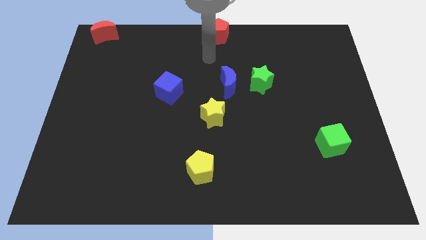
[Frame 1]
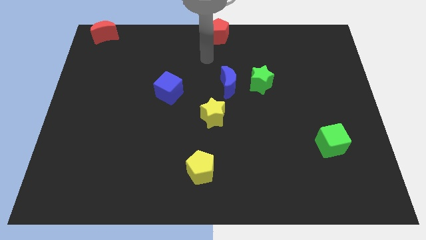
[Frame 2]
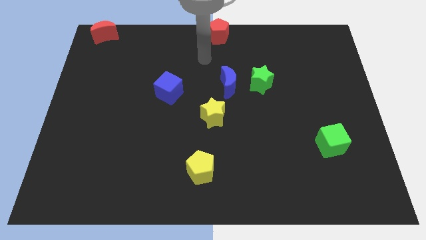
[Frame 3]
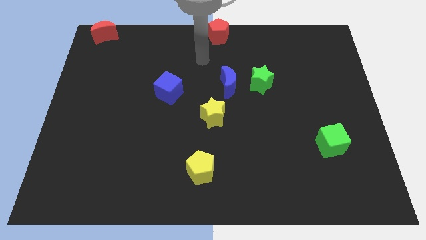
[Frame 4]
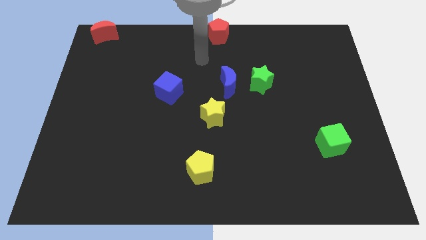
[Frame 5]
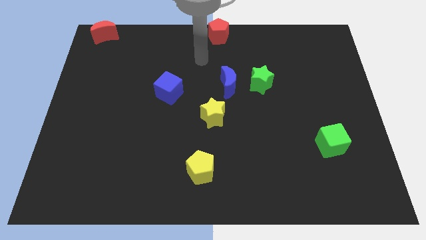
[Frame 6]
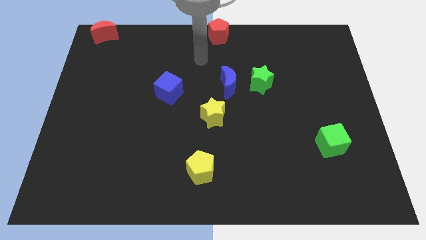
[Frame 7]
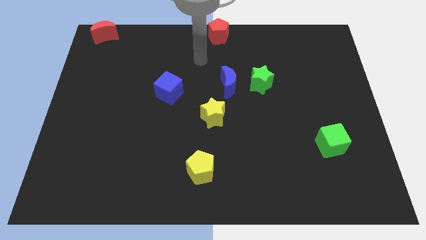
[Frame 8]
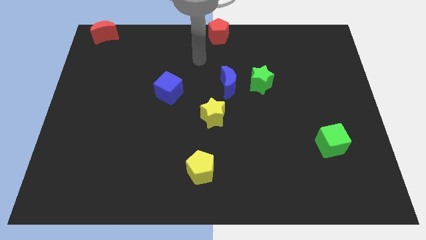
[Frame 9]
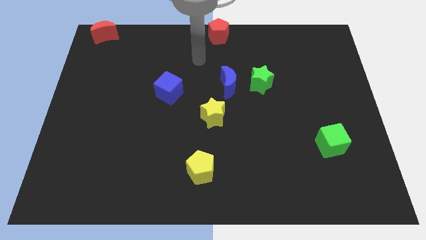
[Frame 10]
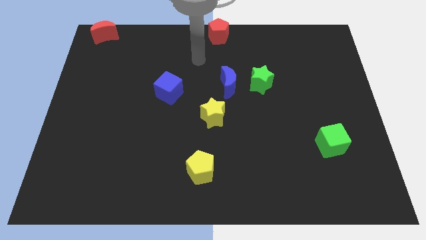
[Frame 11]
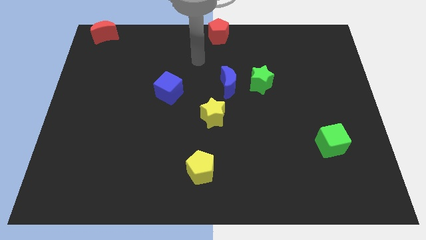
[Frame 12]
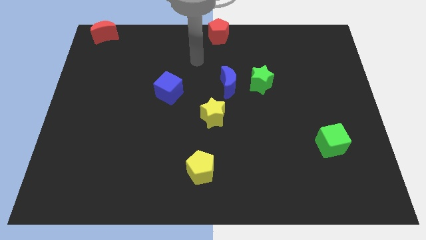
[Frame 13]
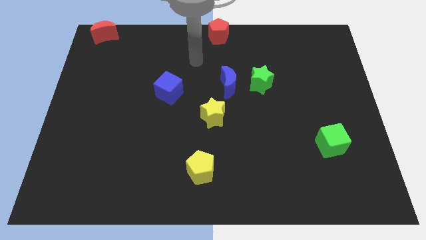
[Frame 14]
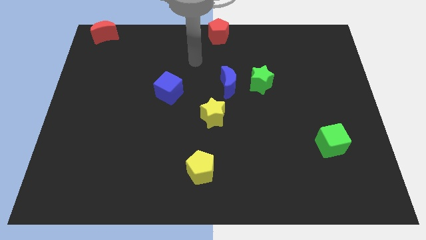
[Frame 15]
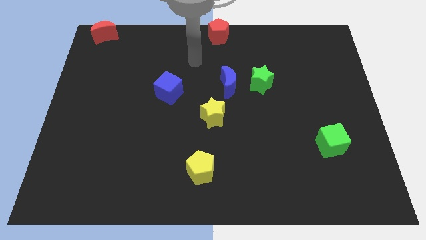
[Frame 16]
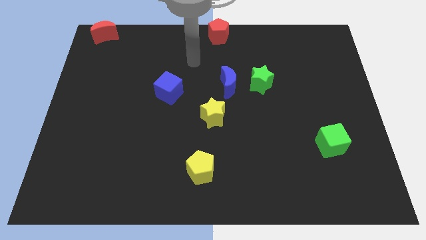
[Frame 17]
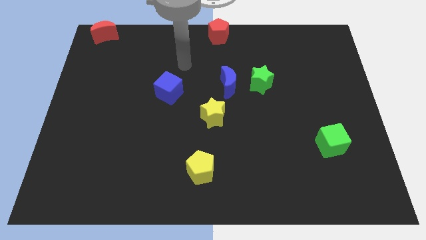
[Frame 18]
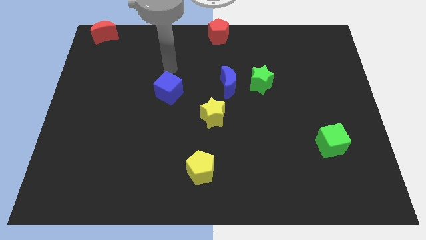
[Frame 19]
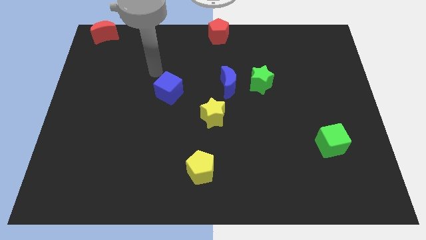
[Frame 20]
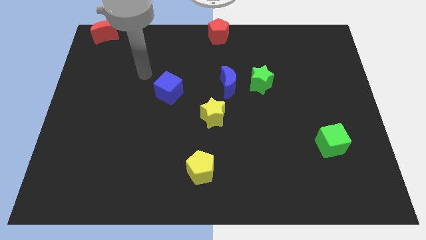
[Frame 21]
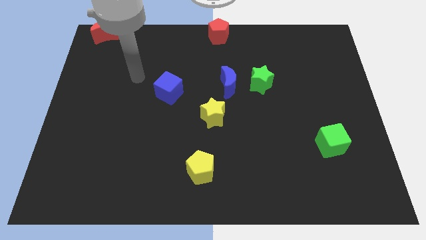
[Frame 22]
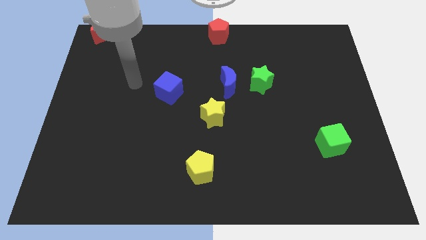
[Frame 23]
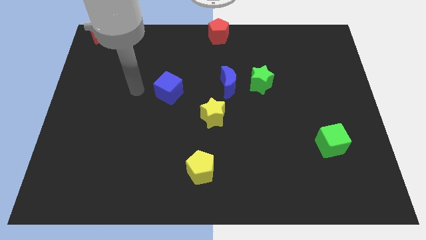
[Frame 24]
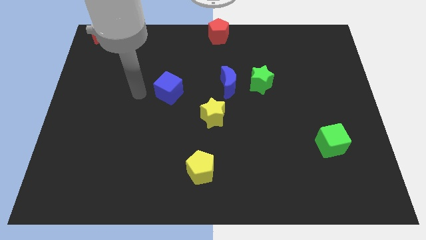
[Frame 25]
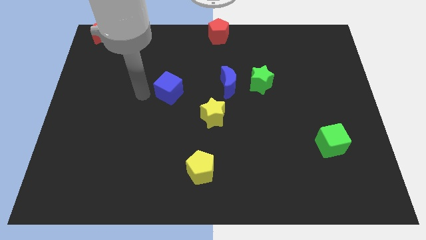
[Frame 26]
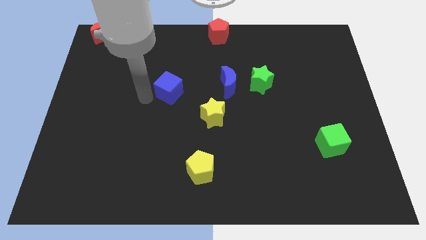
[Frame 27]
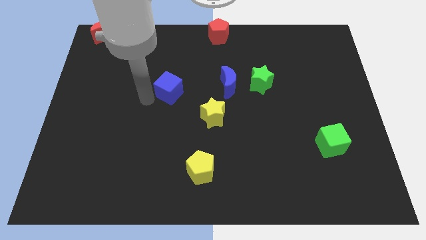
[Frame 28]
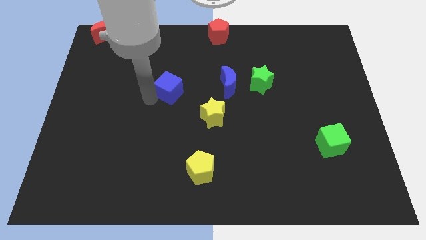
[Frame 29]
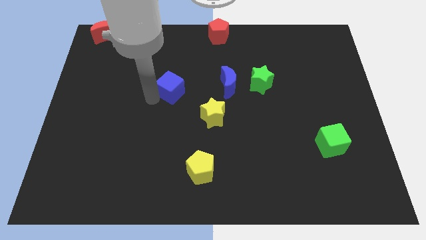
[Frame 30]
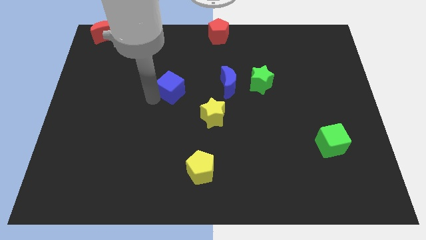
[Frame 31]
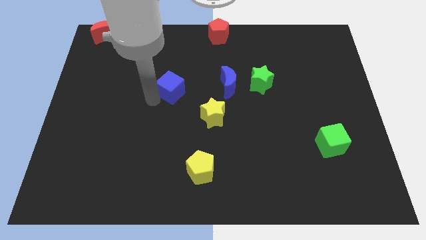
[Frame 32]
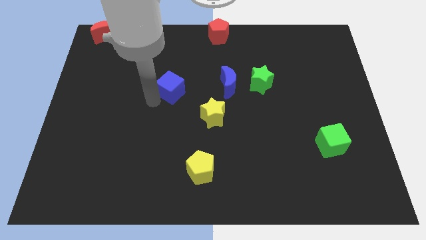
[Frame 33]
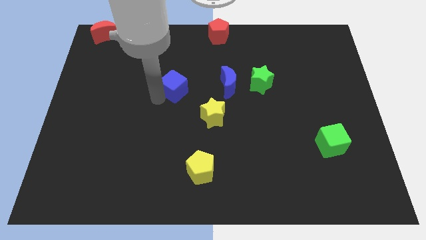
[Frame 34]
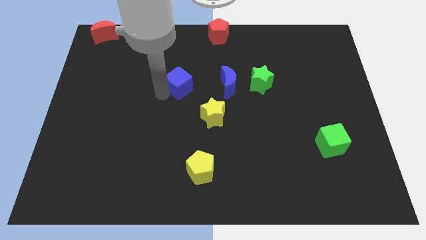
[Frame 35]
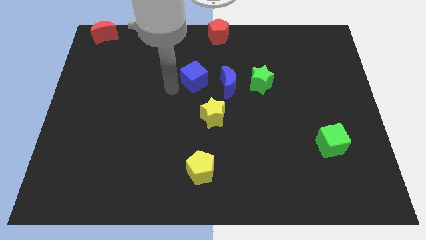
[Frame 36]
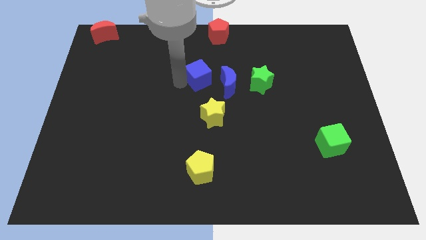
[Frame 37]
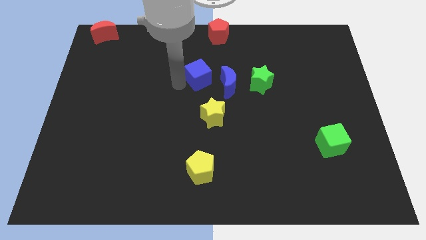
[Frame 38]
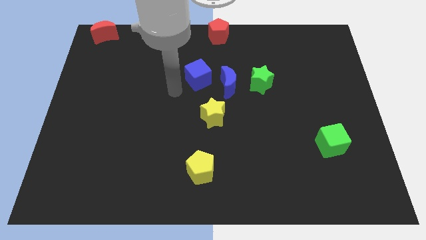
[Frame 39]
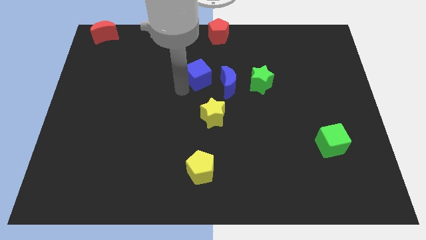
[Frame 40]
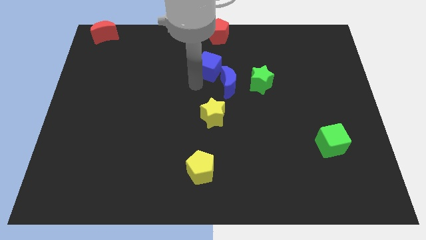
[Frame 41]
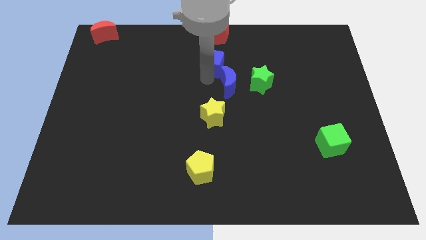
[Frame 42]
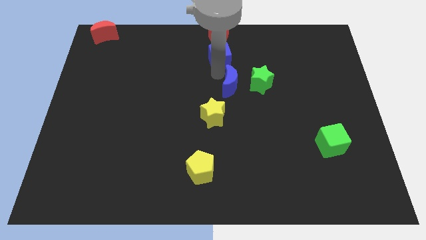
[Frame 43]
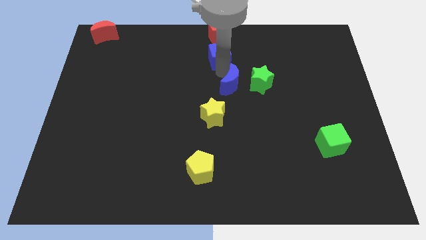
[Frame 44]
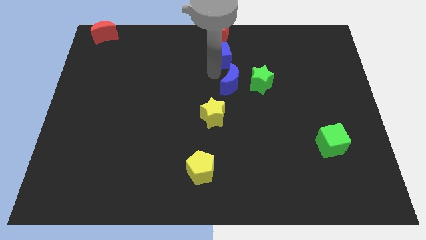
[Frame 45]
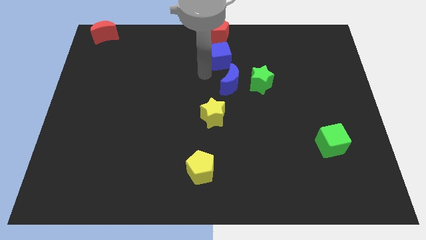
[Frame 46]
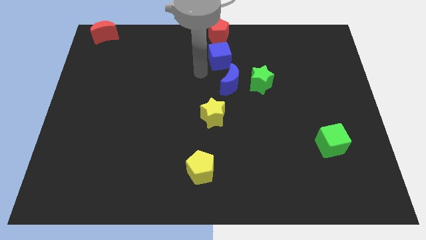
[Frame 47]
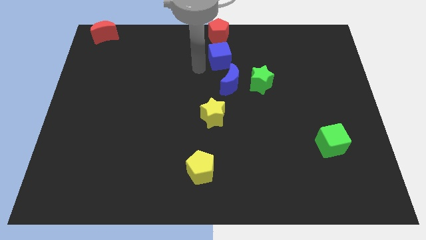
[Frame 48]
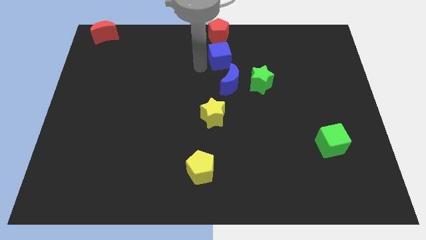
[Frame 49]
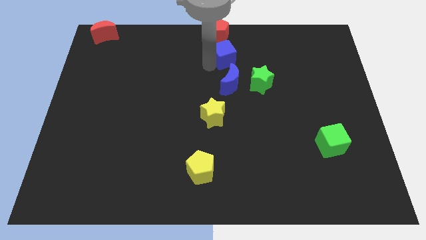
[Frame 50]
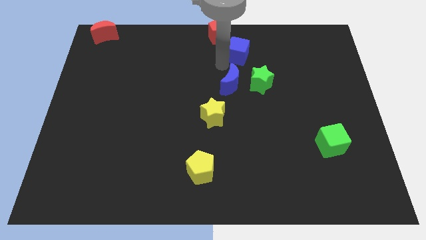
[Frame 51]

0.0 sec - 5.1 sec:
push the blue cube to the top of the blue crescent

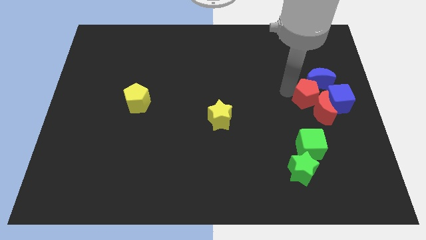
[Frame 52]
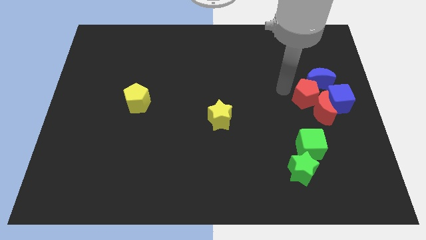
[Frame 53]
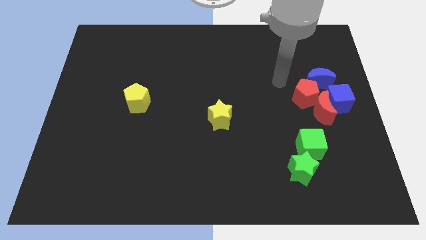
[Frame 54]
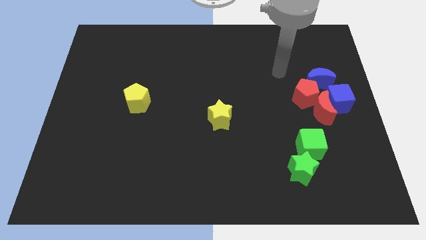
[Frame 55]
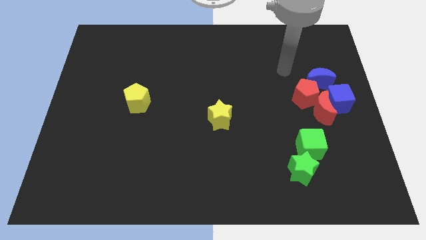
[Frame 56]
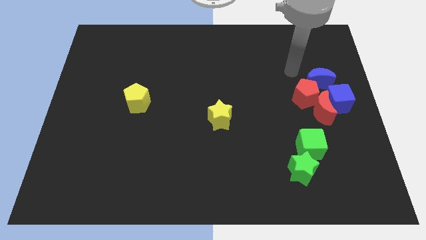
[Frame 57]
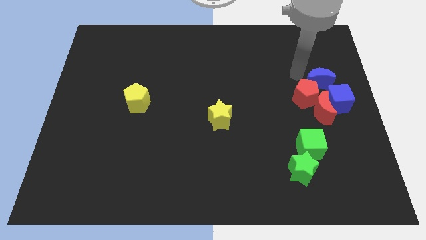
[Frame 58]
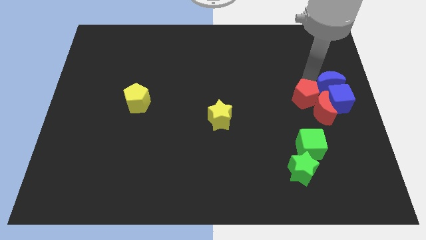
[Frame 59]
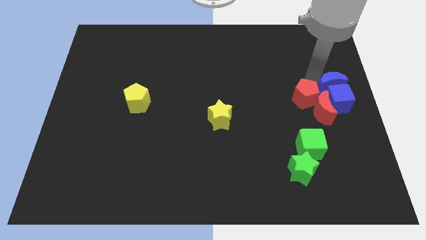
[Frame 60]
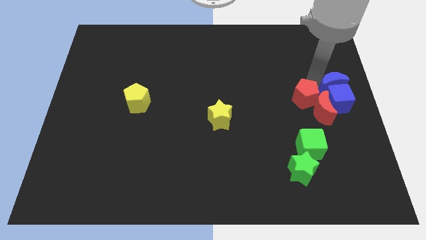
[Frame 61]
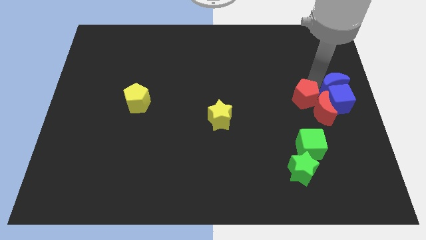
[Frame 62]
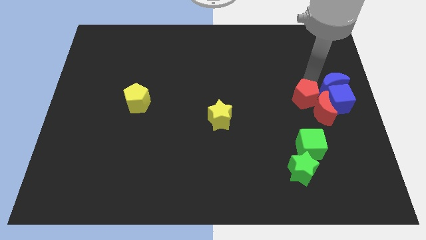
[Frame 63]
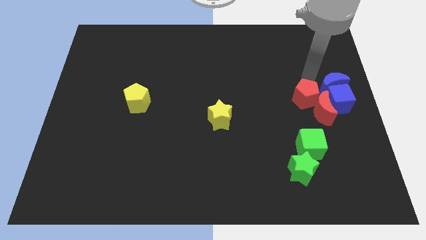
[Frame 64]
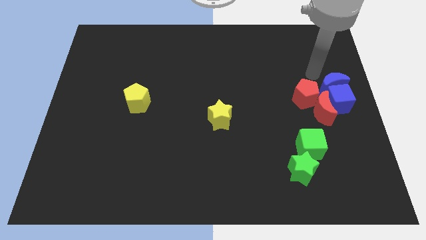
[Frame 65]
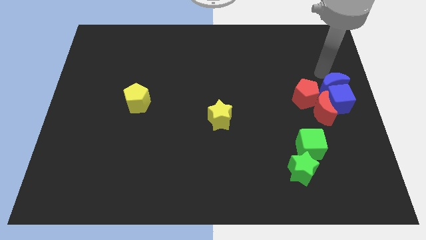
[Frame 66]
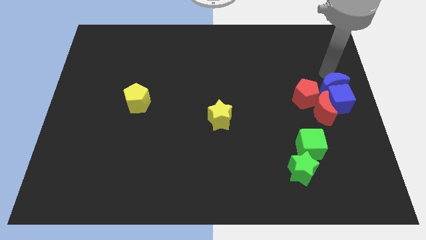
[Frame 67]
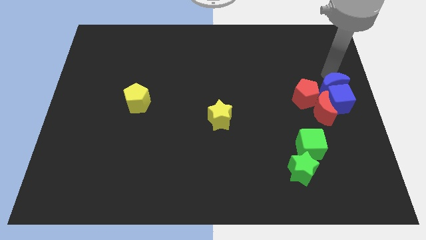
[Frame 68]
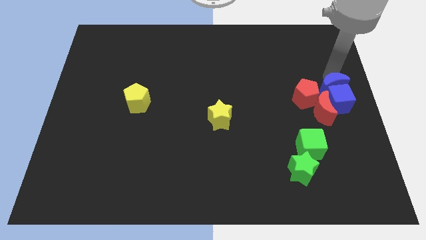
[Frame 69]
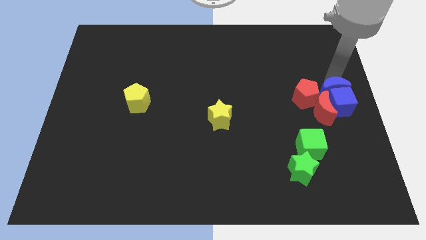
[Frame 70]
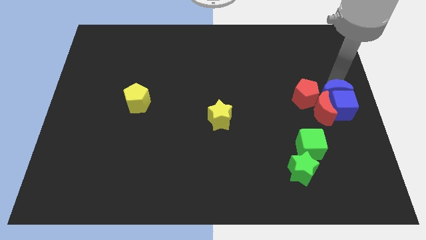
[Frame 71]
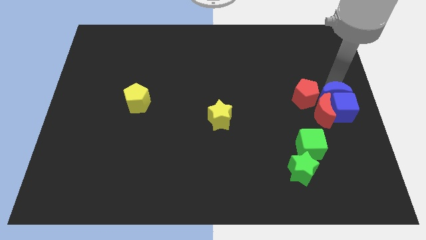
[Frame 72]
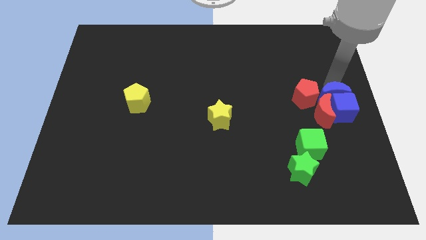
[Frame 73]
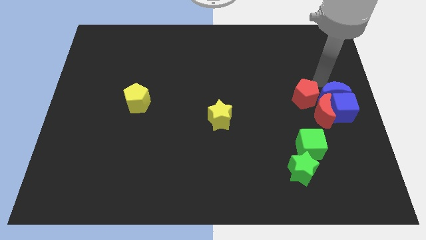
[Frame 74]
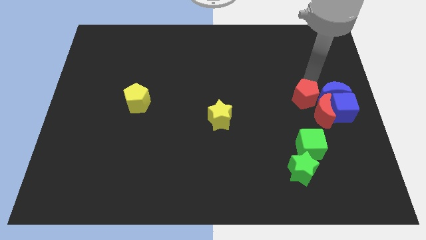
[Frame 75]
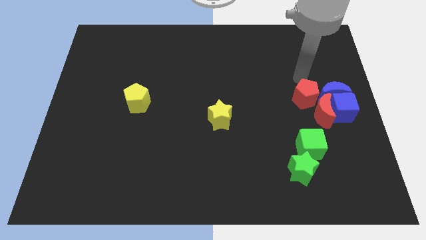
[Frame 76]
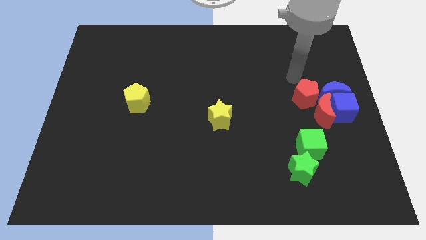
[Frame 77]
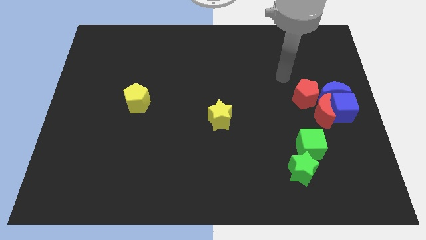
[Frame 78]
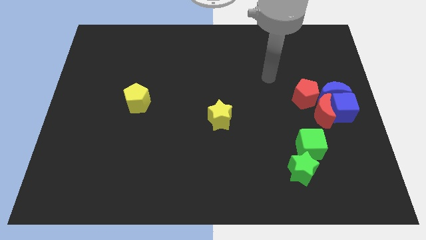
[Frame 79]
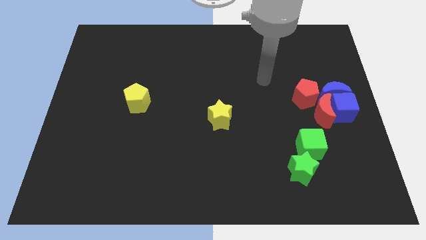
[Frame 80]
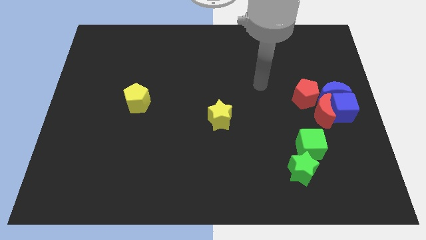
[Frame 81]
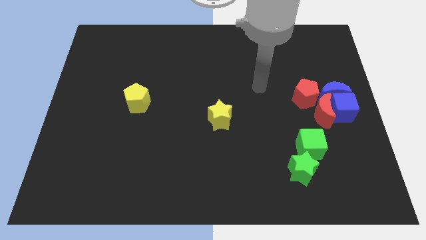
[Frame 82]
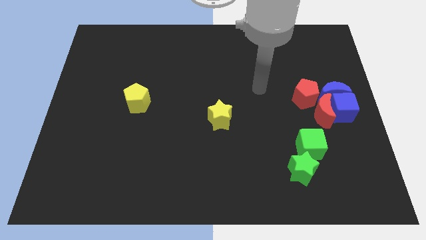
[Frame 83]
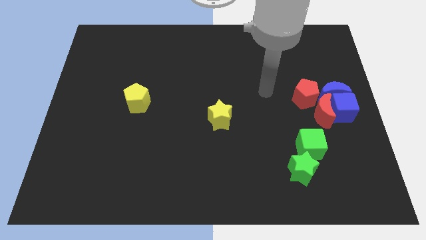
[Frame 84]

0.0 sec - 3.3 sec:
push the blue crescent into the blue cube

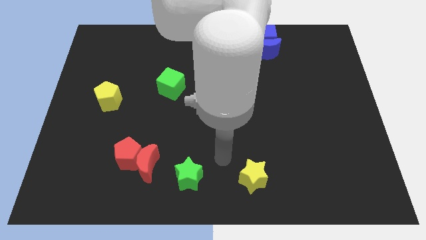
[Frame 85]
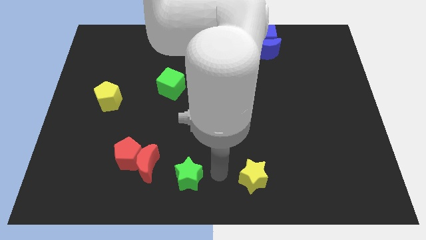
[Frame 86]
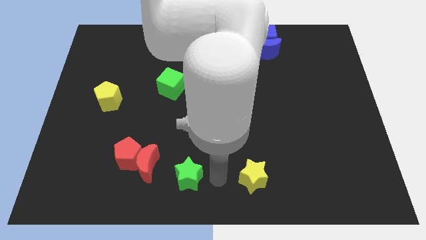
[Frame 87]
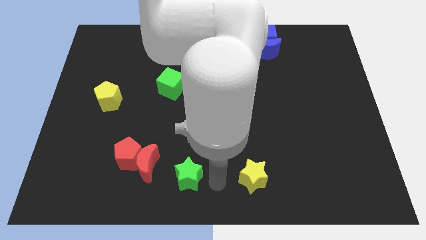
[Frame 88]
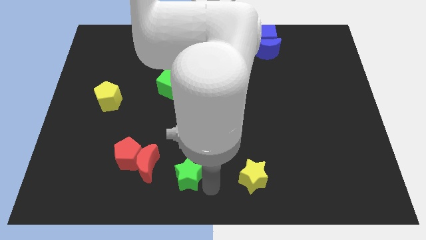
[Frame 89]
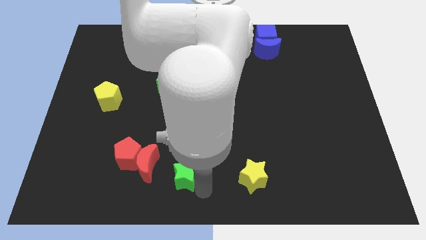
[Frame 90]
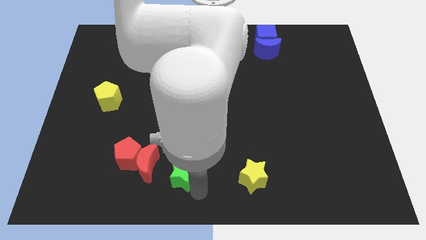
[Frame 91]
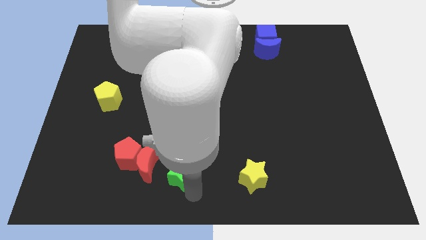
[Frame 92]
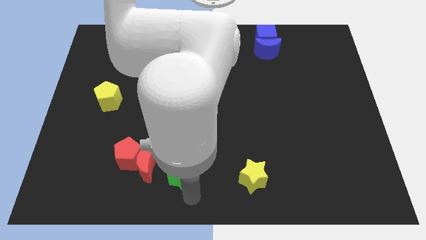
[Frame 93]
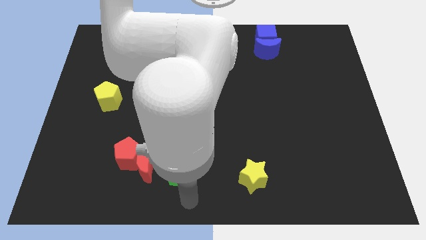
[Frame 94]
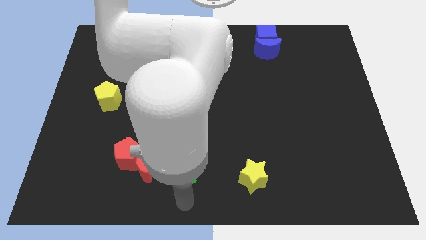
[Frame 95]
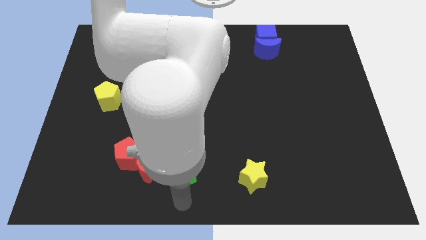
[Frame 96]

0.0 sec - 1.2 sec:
move the green star slightly towards the left
